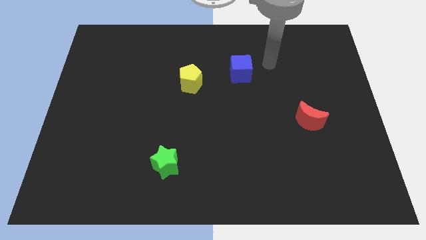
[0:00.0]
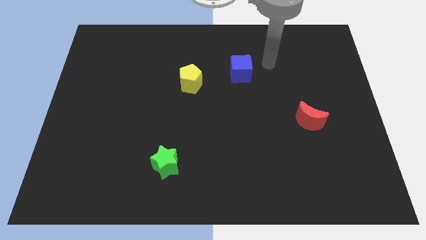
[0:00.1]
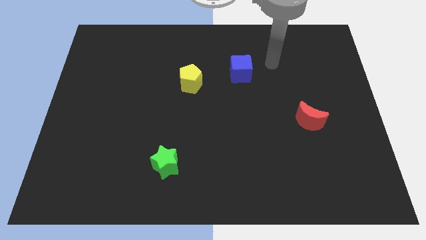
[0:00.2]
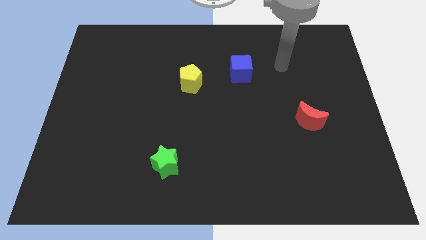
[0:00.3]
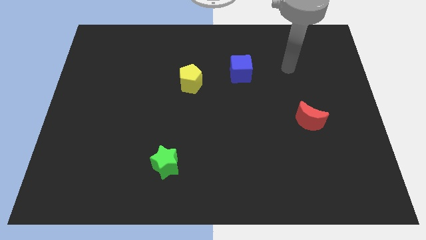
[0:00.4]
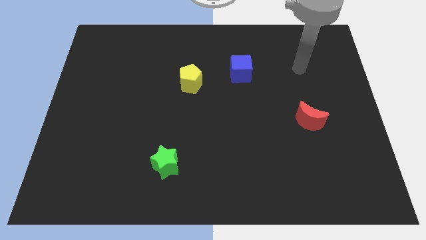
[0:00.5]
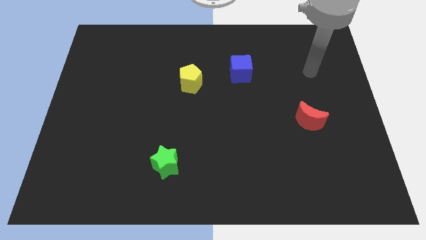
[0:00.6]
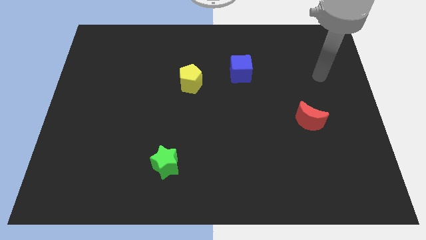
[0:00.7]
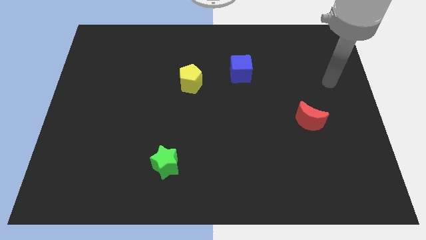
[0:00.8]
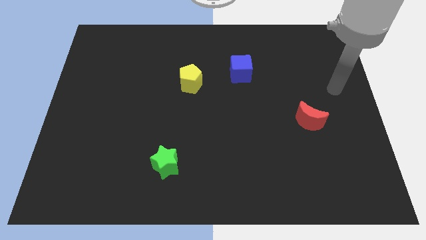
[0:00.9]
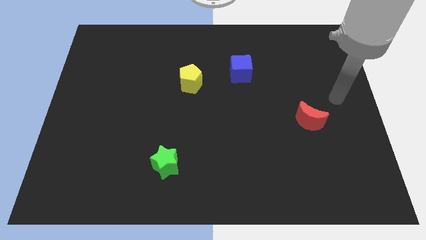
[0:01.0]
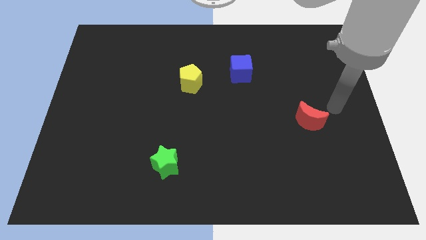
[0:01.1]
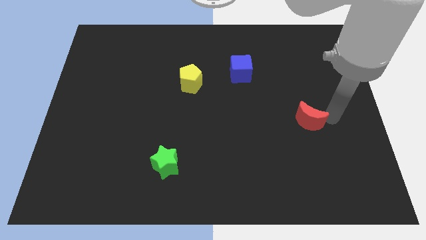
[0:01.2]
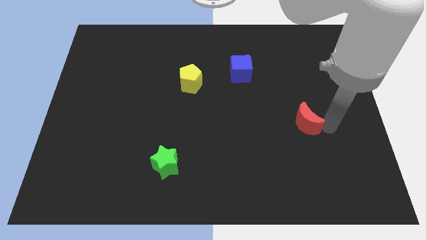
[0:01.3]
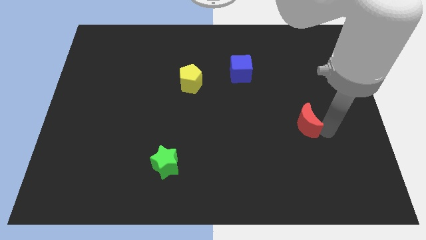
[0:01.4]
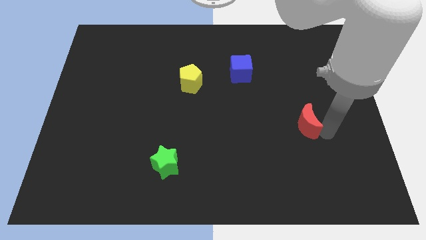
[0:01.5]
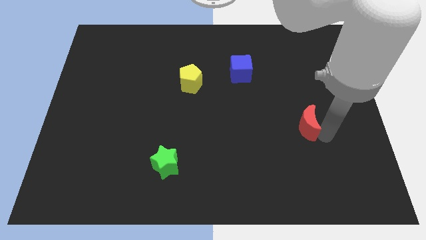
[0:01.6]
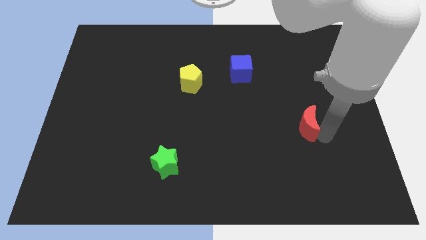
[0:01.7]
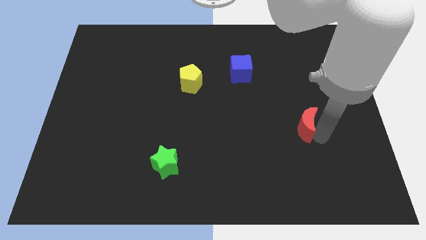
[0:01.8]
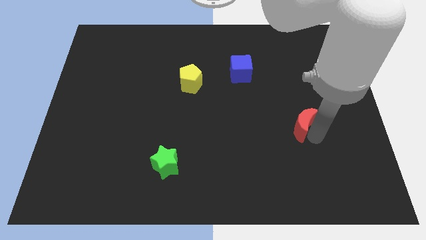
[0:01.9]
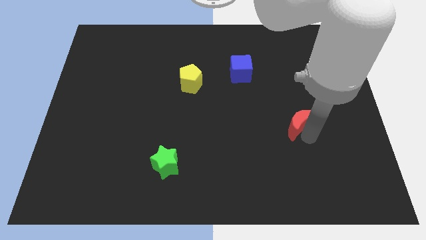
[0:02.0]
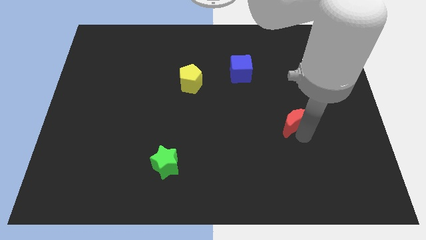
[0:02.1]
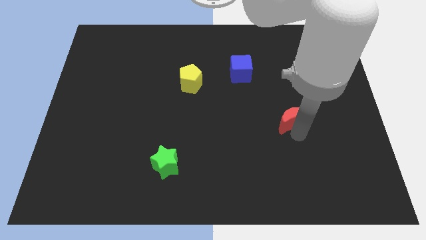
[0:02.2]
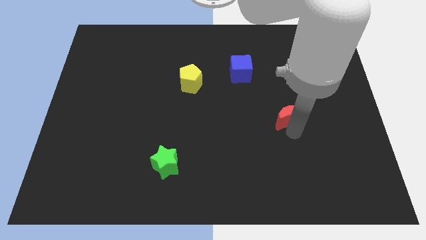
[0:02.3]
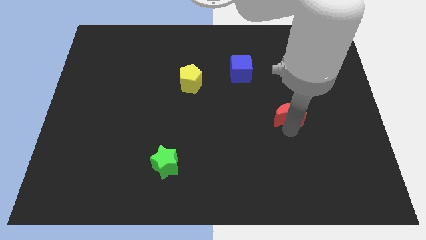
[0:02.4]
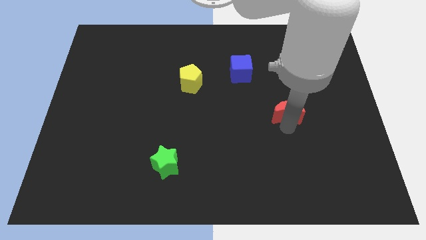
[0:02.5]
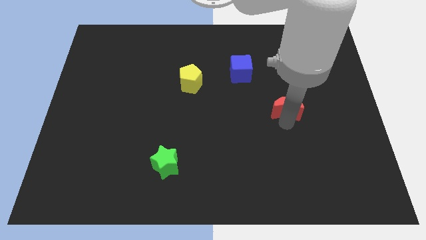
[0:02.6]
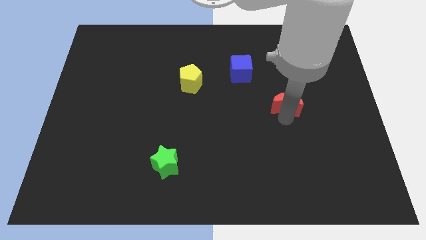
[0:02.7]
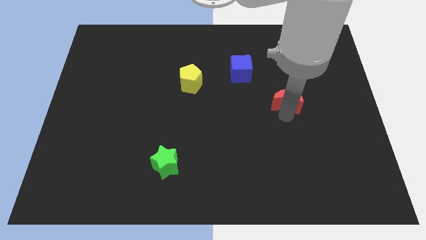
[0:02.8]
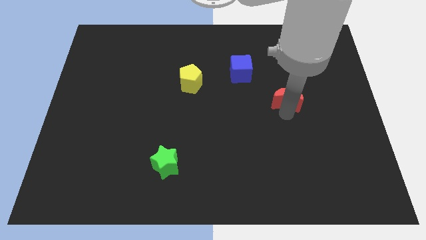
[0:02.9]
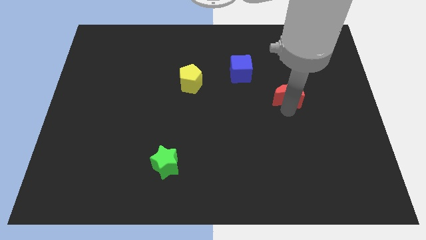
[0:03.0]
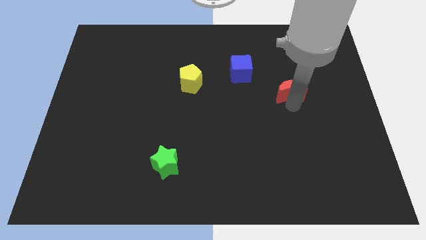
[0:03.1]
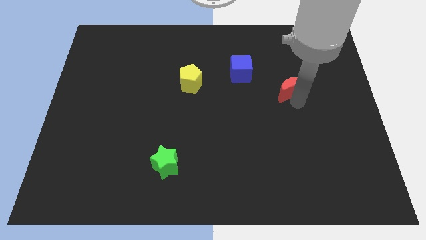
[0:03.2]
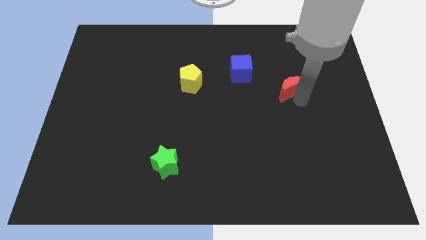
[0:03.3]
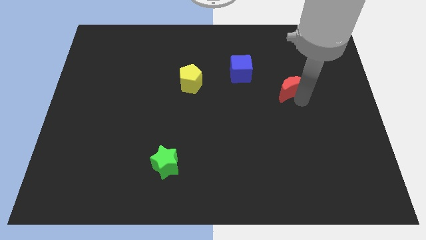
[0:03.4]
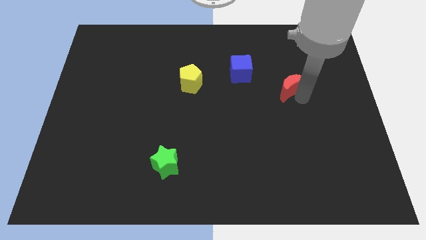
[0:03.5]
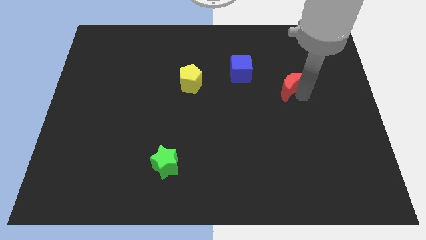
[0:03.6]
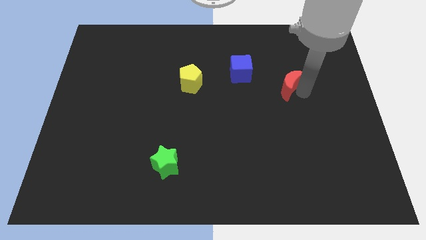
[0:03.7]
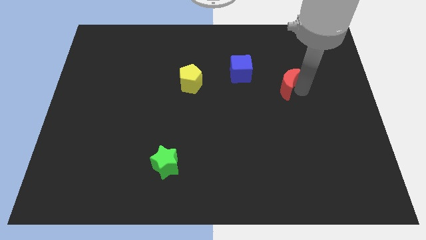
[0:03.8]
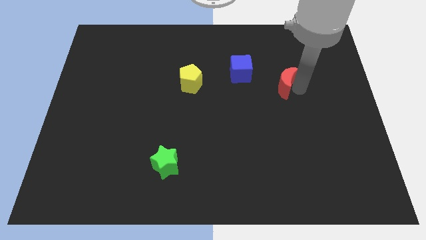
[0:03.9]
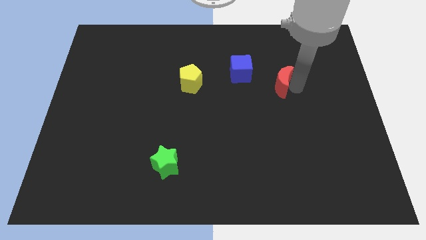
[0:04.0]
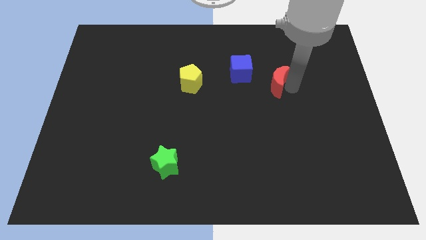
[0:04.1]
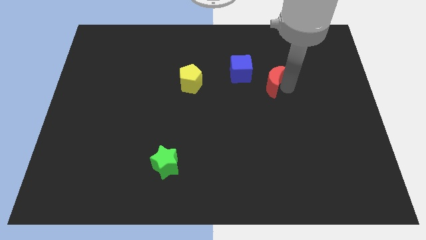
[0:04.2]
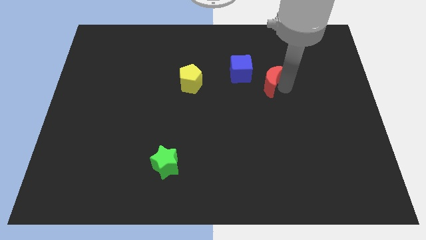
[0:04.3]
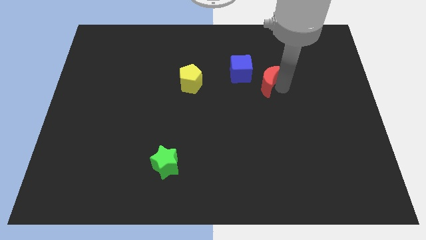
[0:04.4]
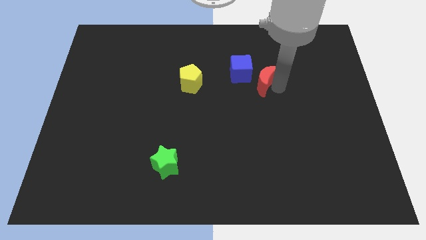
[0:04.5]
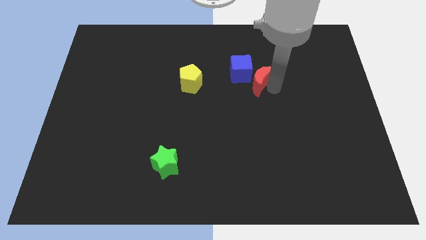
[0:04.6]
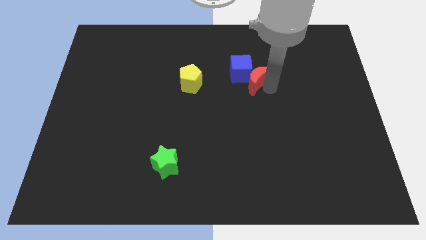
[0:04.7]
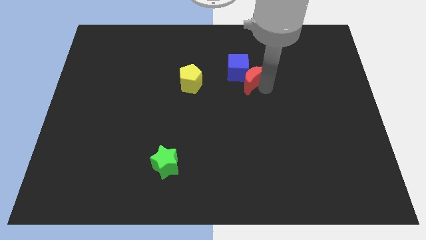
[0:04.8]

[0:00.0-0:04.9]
put the red block to the blue cube

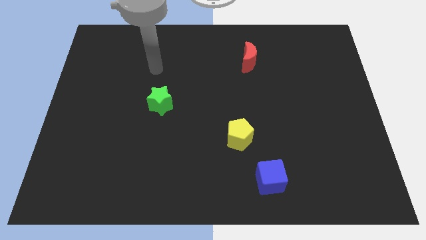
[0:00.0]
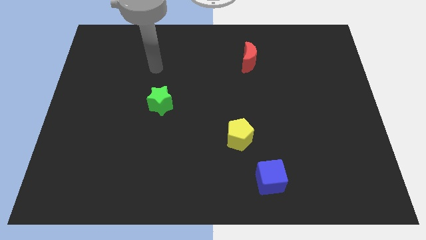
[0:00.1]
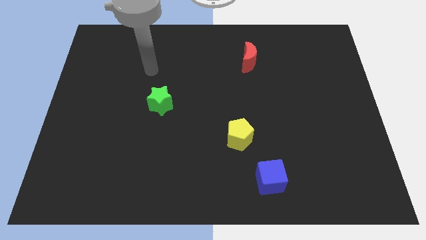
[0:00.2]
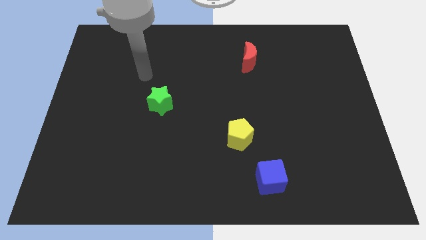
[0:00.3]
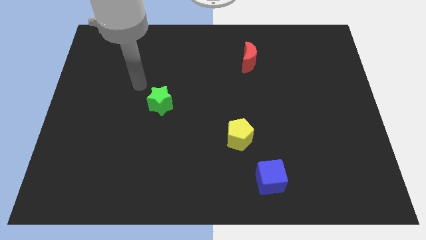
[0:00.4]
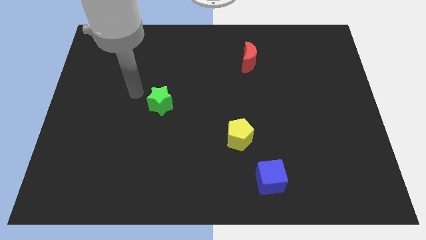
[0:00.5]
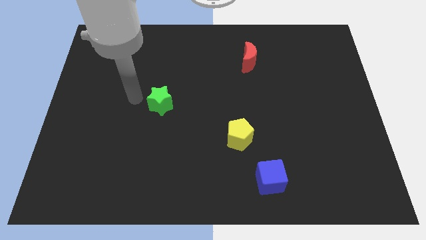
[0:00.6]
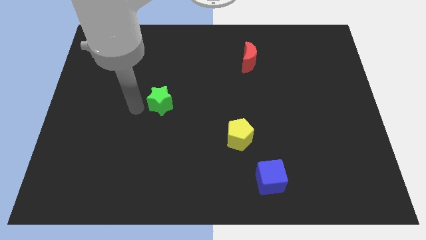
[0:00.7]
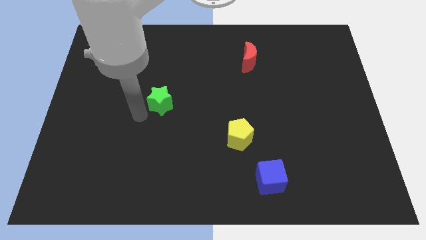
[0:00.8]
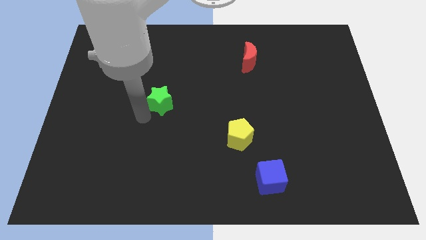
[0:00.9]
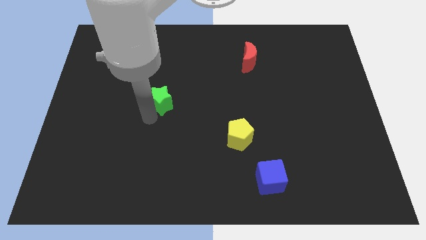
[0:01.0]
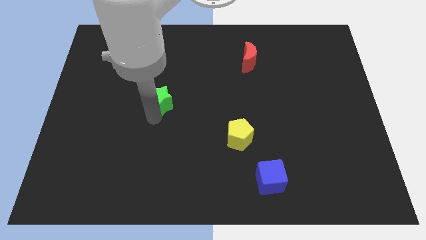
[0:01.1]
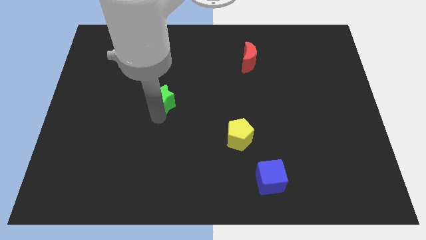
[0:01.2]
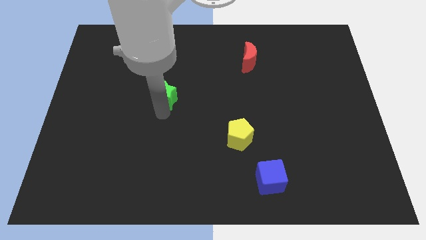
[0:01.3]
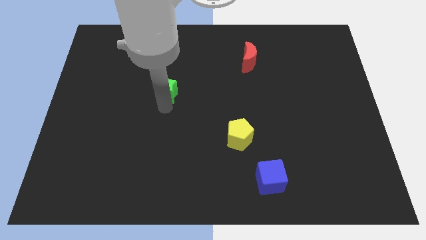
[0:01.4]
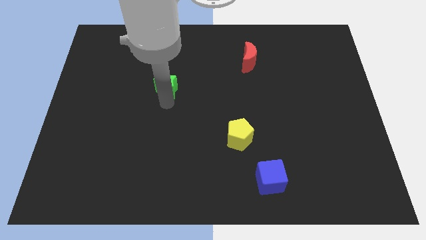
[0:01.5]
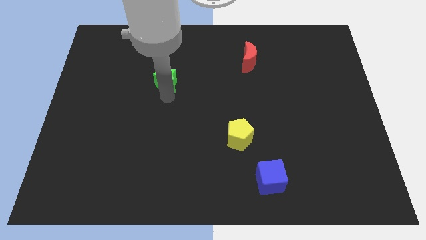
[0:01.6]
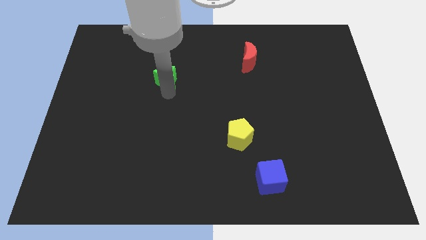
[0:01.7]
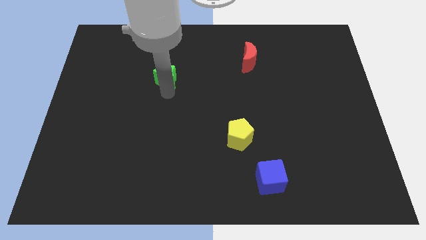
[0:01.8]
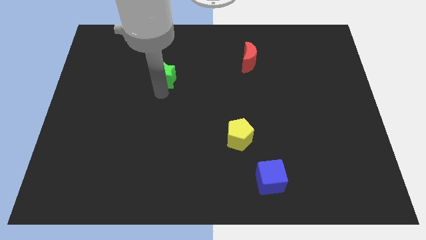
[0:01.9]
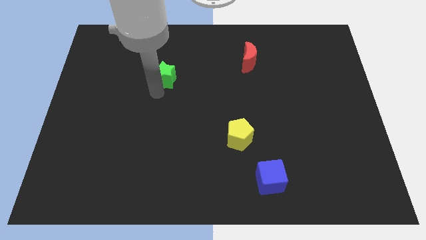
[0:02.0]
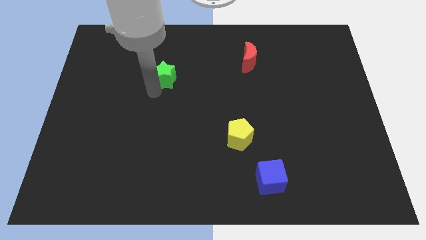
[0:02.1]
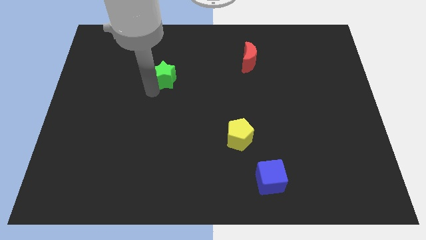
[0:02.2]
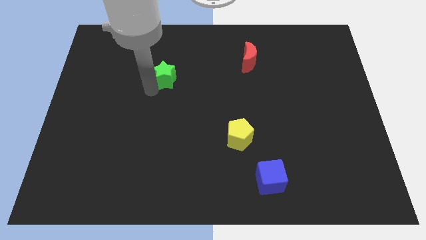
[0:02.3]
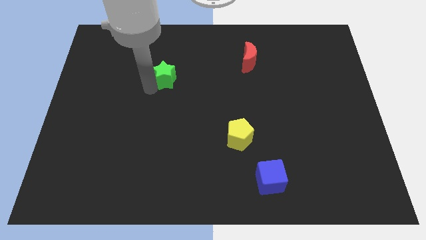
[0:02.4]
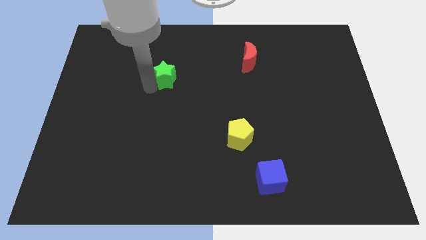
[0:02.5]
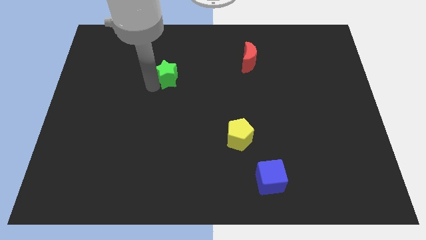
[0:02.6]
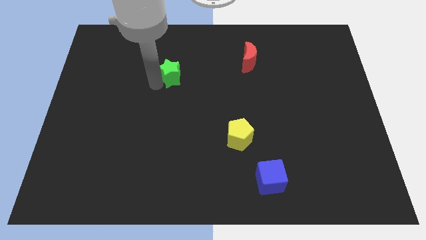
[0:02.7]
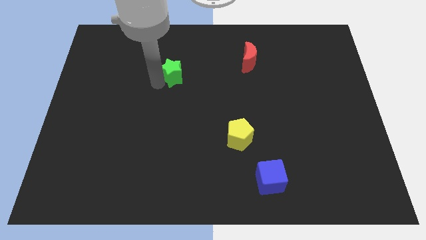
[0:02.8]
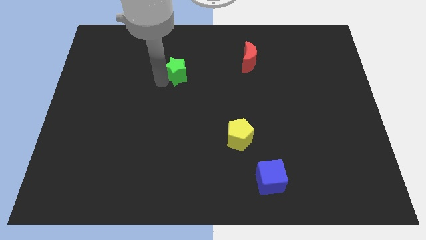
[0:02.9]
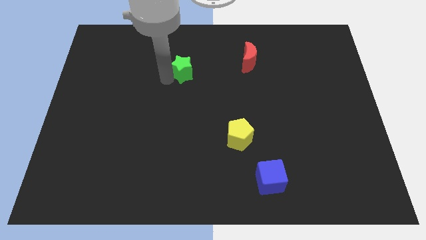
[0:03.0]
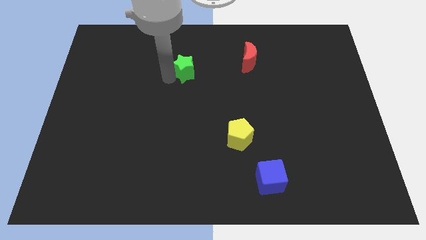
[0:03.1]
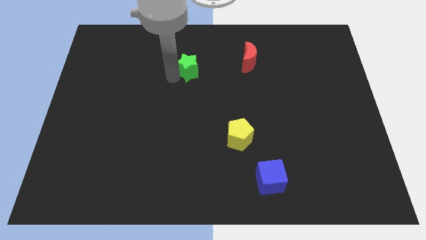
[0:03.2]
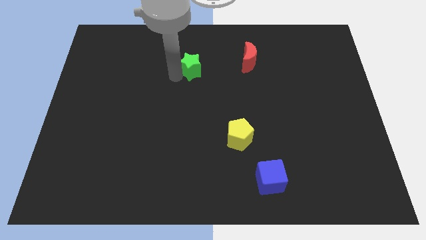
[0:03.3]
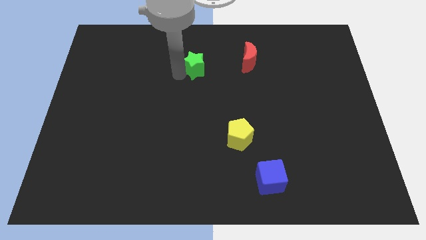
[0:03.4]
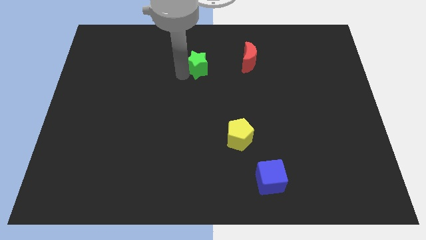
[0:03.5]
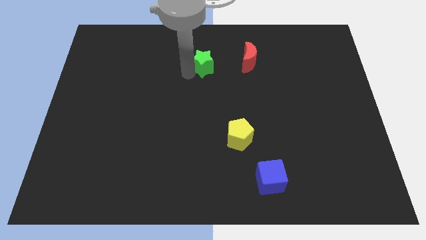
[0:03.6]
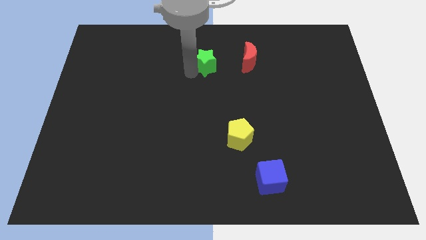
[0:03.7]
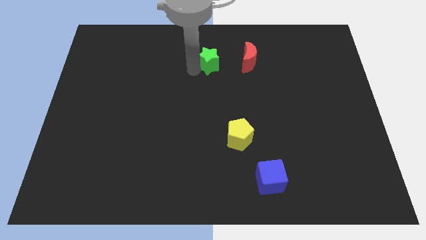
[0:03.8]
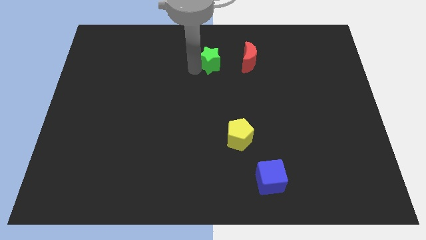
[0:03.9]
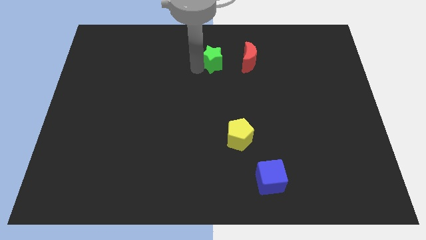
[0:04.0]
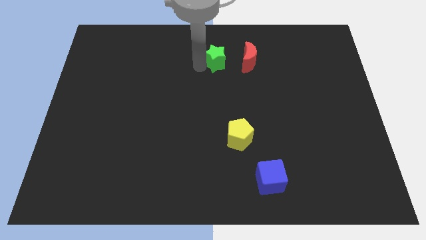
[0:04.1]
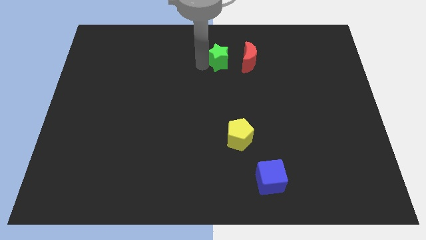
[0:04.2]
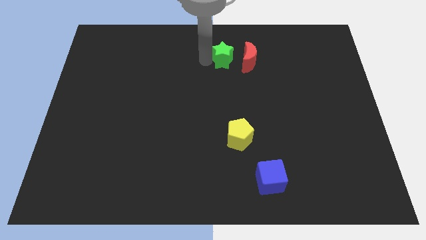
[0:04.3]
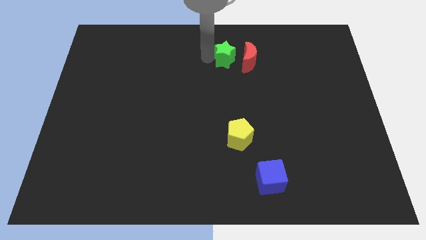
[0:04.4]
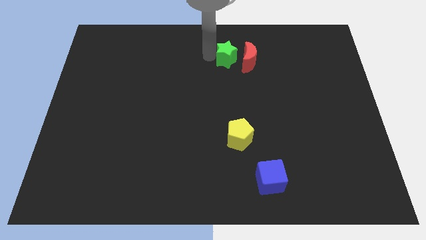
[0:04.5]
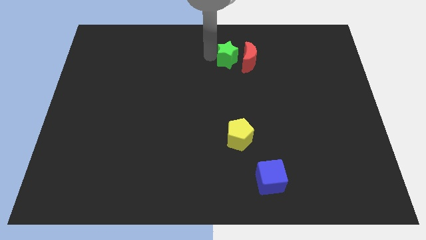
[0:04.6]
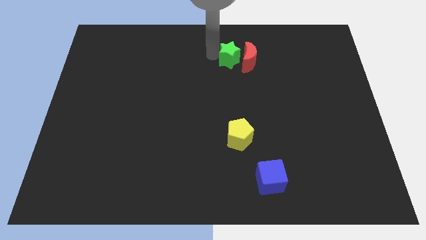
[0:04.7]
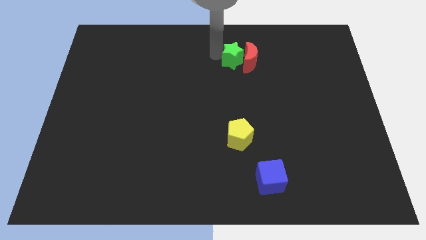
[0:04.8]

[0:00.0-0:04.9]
slide the green star towards the moon
